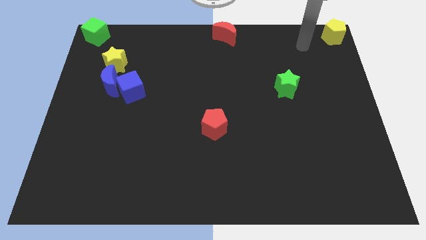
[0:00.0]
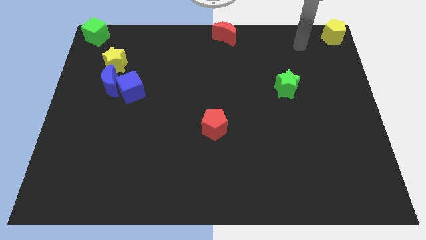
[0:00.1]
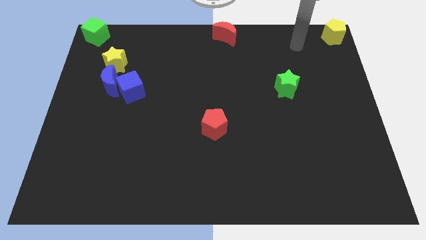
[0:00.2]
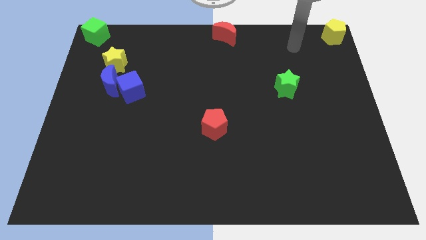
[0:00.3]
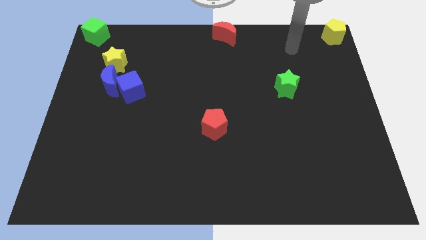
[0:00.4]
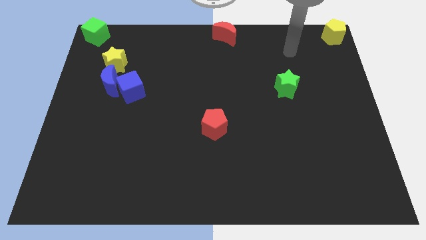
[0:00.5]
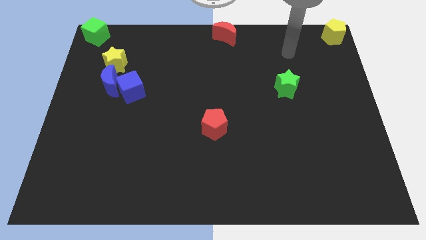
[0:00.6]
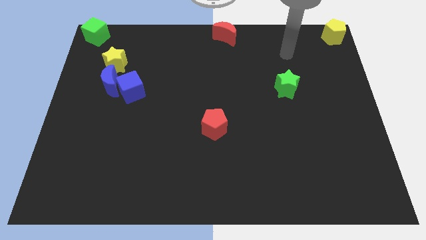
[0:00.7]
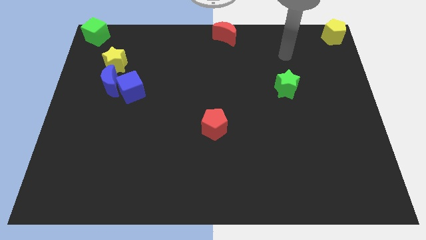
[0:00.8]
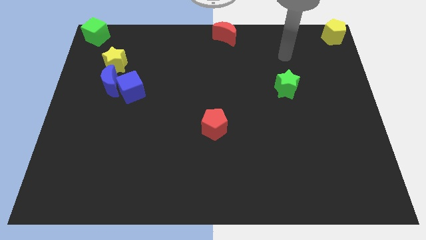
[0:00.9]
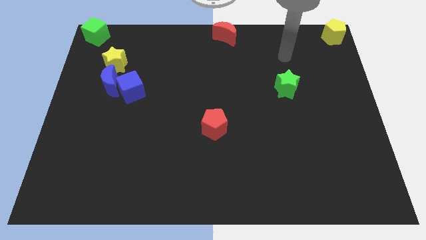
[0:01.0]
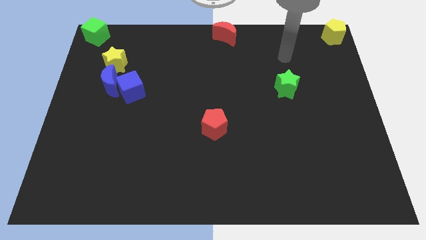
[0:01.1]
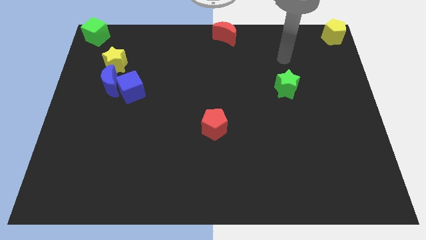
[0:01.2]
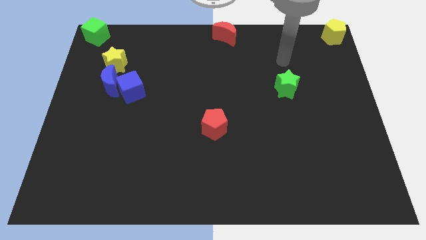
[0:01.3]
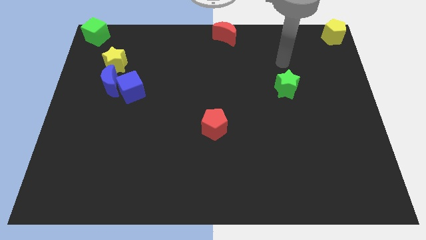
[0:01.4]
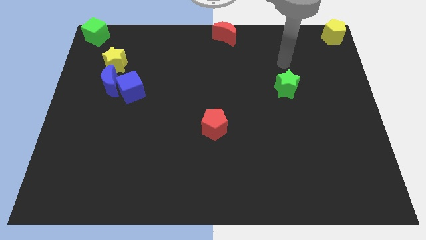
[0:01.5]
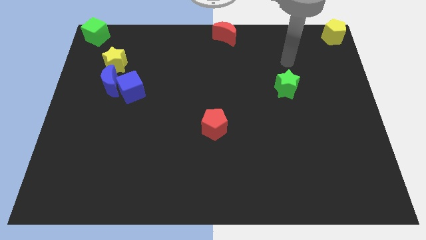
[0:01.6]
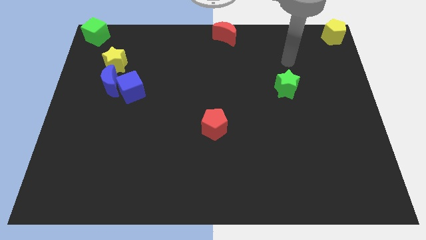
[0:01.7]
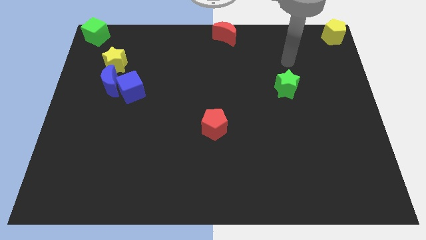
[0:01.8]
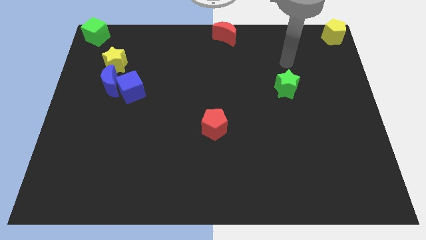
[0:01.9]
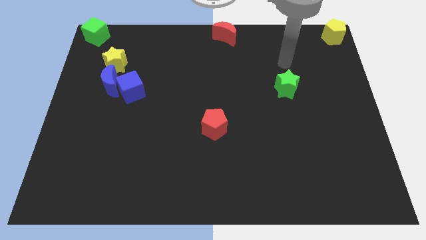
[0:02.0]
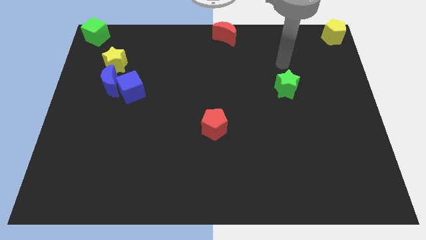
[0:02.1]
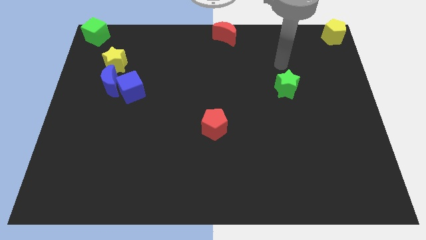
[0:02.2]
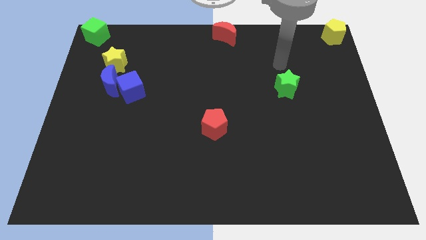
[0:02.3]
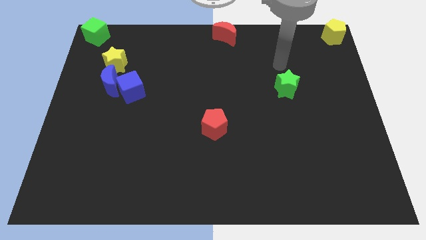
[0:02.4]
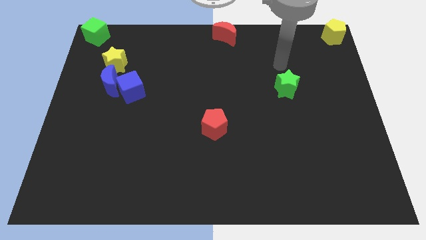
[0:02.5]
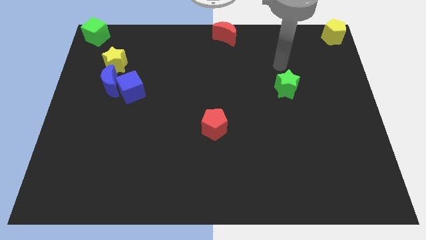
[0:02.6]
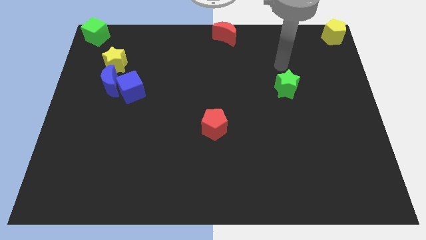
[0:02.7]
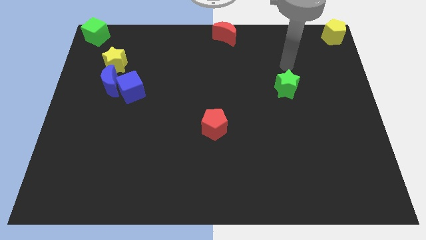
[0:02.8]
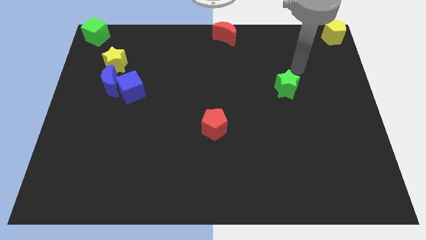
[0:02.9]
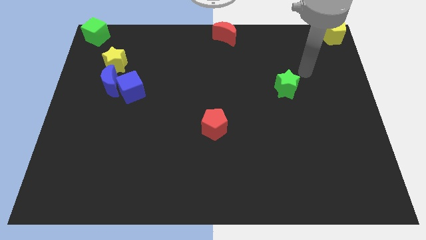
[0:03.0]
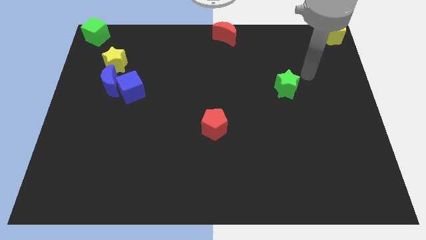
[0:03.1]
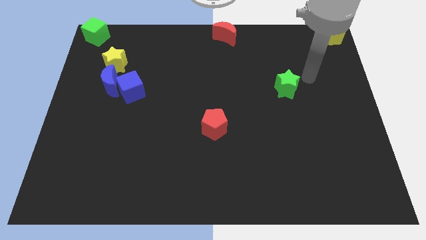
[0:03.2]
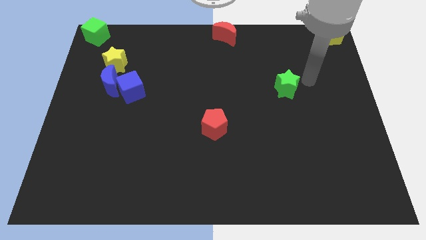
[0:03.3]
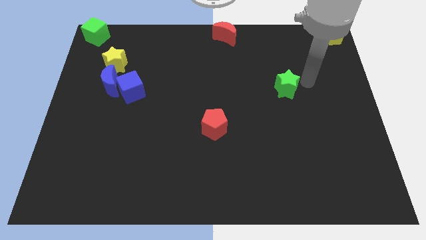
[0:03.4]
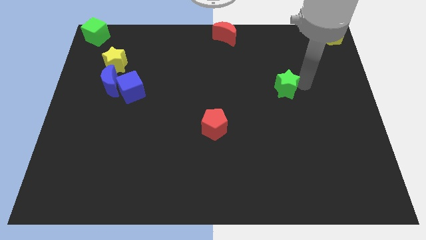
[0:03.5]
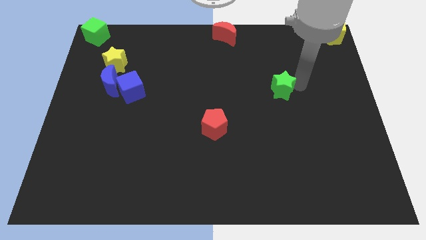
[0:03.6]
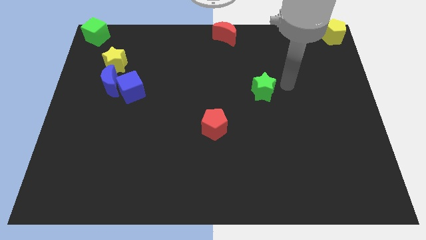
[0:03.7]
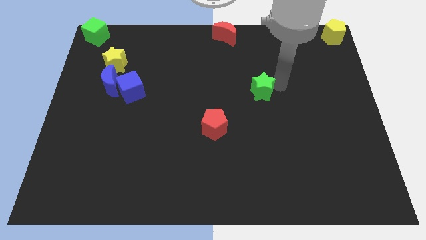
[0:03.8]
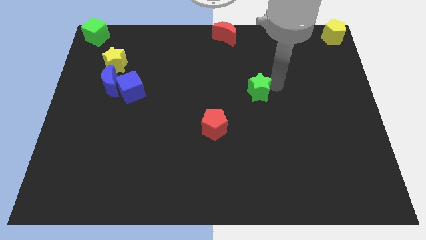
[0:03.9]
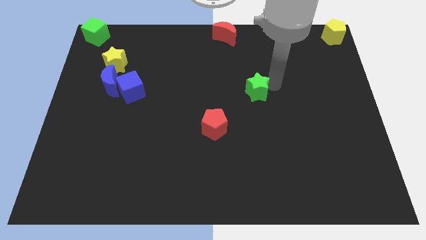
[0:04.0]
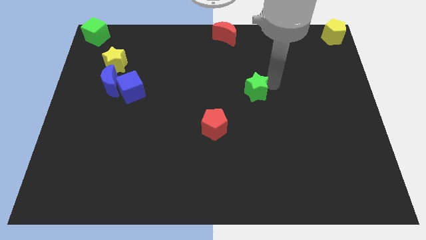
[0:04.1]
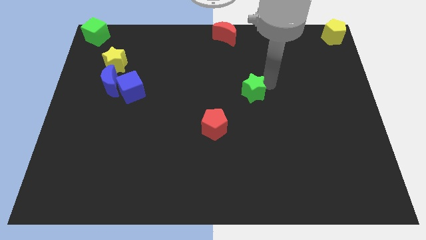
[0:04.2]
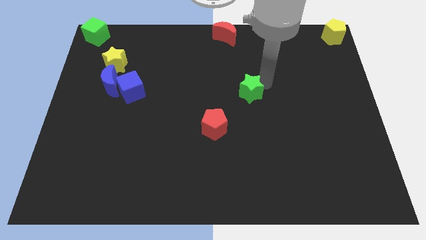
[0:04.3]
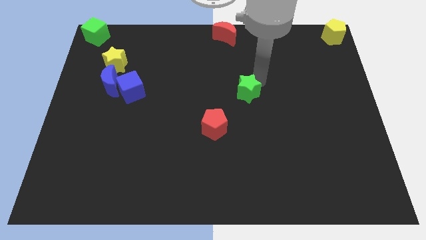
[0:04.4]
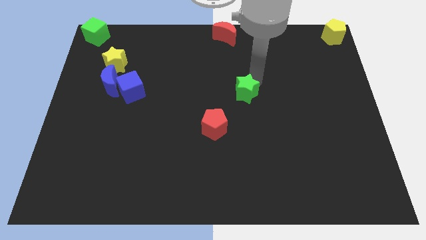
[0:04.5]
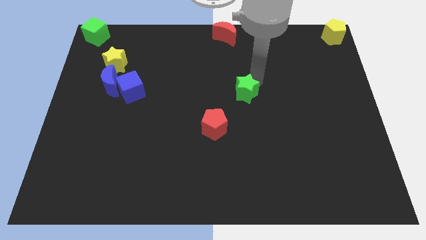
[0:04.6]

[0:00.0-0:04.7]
drag the green star towards the red pentagon

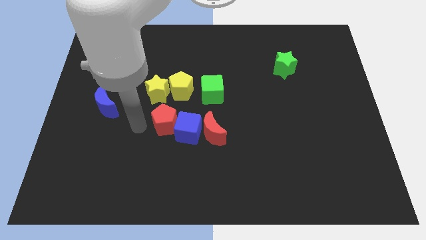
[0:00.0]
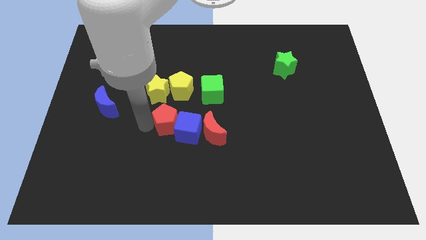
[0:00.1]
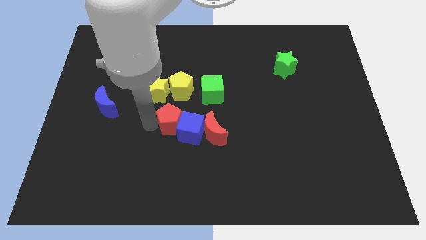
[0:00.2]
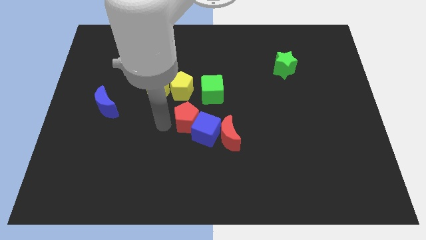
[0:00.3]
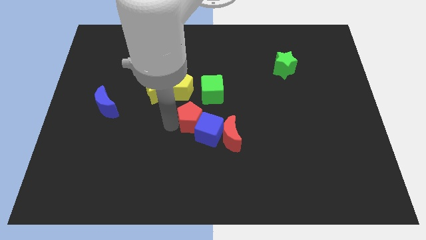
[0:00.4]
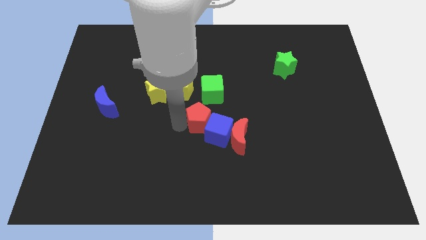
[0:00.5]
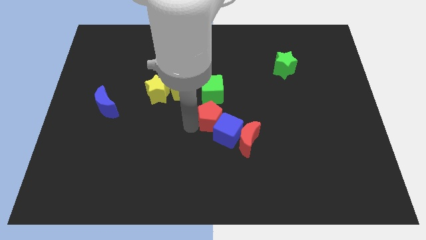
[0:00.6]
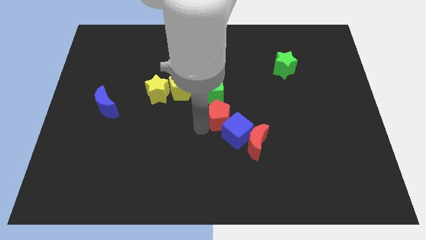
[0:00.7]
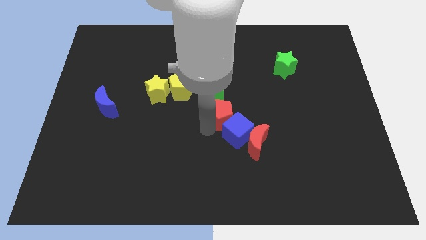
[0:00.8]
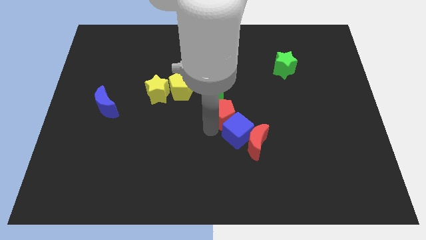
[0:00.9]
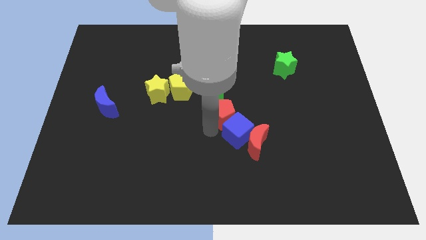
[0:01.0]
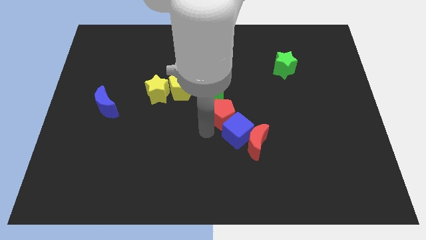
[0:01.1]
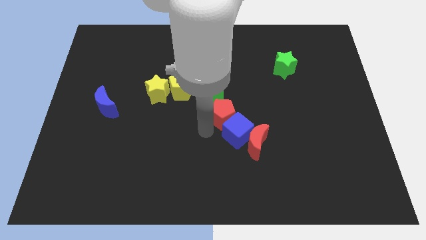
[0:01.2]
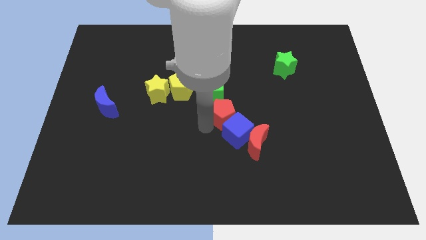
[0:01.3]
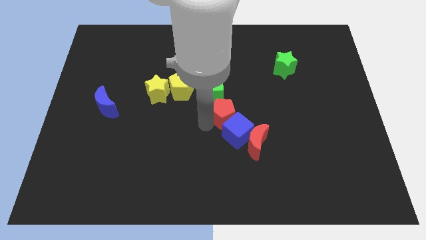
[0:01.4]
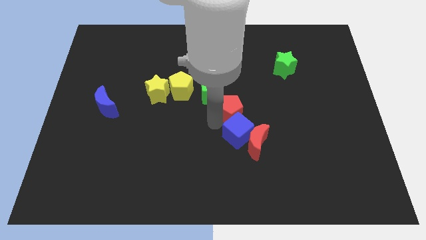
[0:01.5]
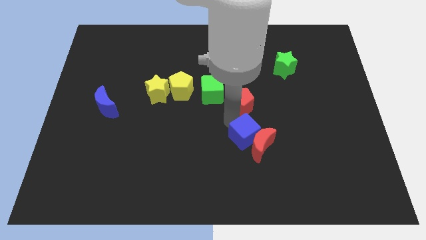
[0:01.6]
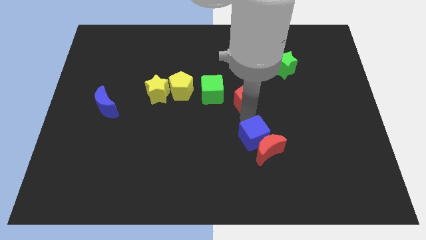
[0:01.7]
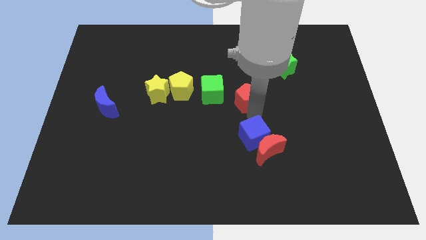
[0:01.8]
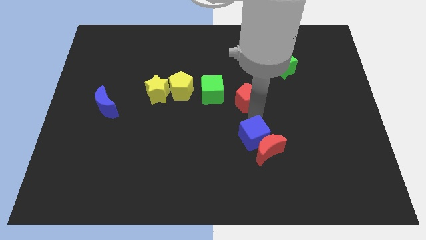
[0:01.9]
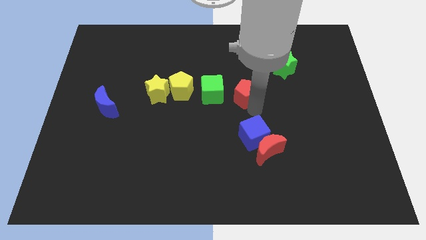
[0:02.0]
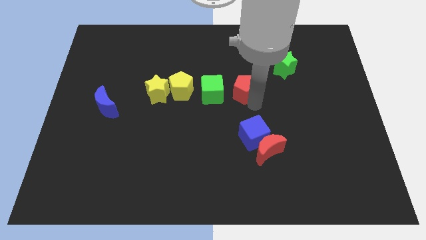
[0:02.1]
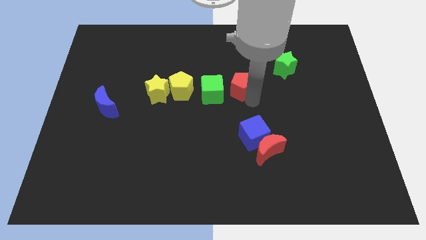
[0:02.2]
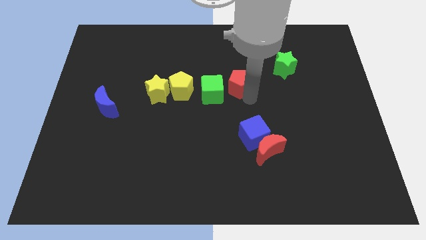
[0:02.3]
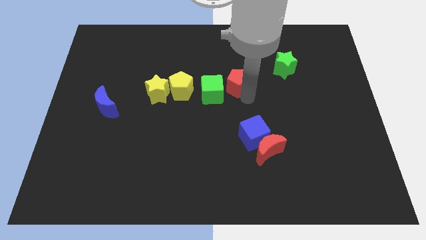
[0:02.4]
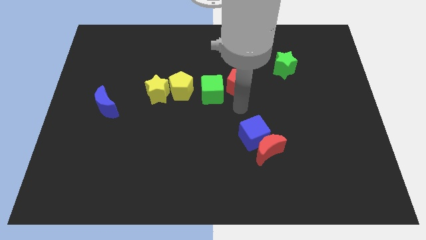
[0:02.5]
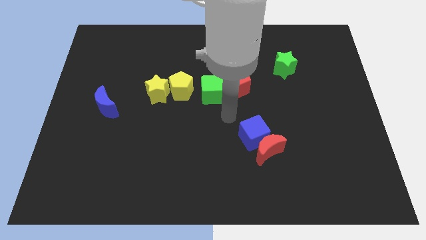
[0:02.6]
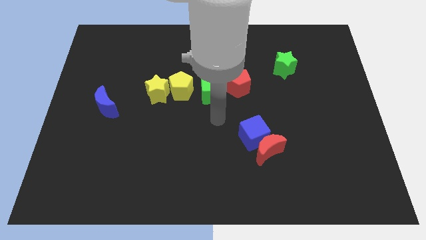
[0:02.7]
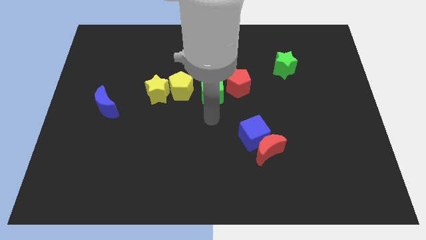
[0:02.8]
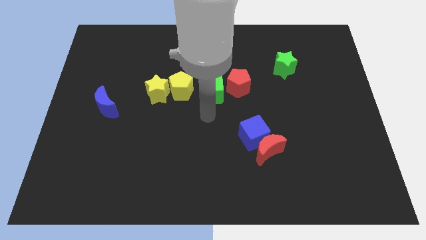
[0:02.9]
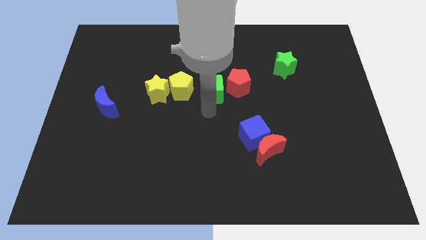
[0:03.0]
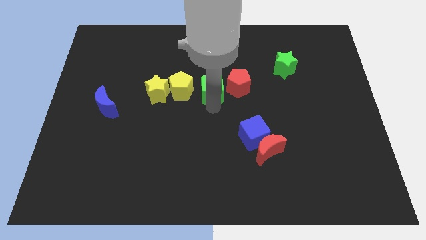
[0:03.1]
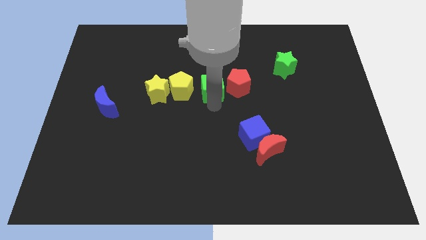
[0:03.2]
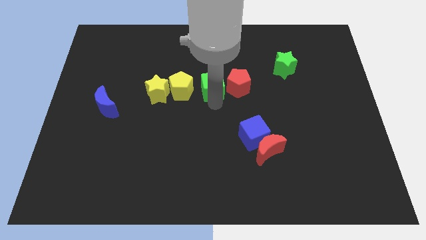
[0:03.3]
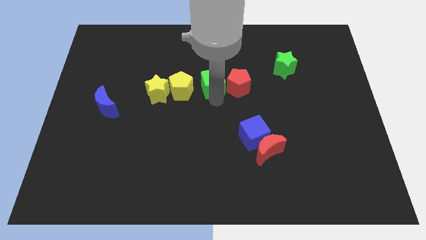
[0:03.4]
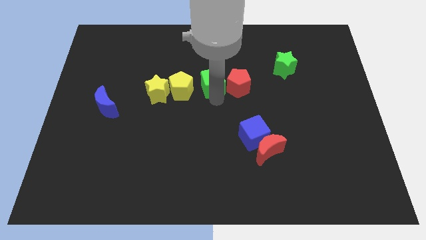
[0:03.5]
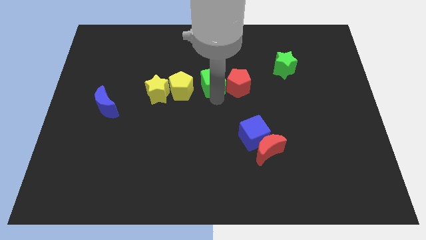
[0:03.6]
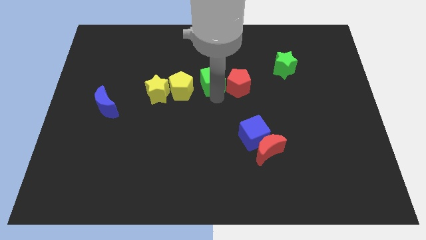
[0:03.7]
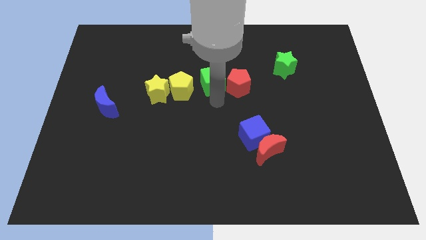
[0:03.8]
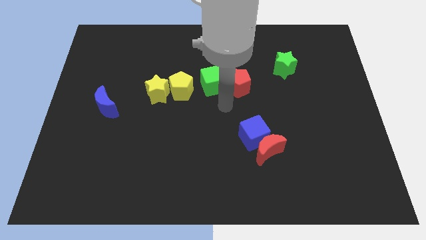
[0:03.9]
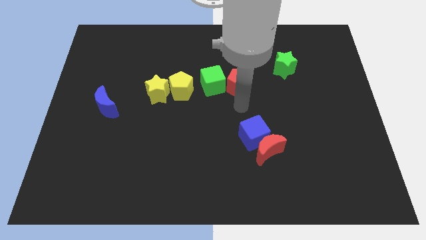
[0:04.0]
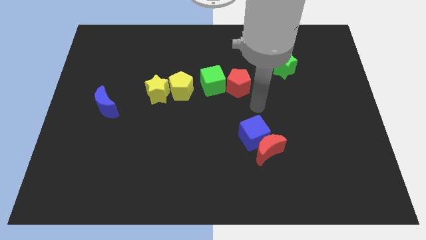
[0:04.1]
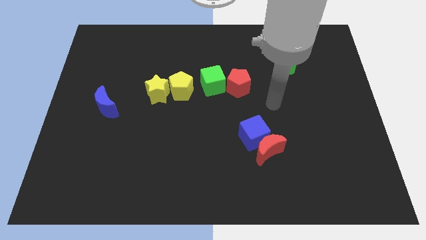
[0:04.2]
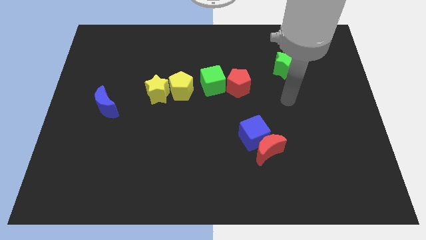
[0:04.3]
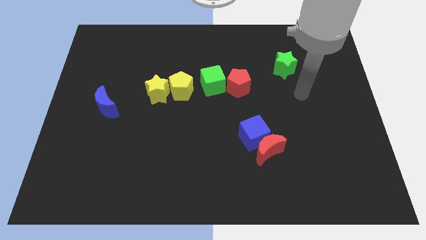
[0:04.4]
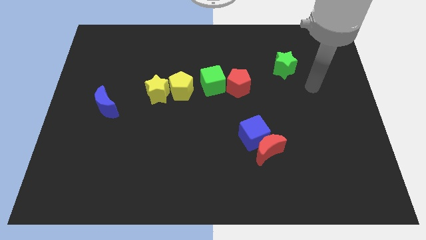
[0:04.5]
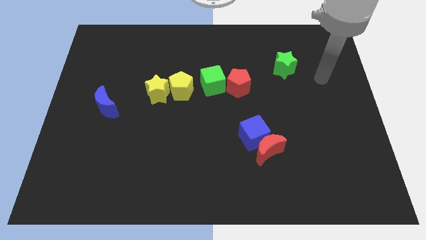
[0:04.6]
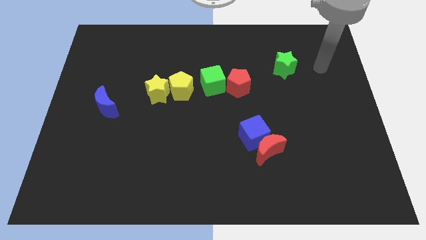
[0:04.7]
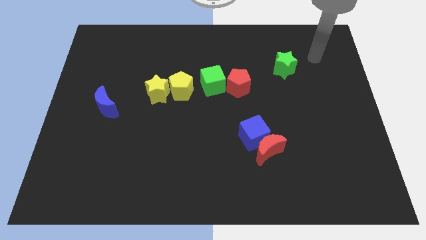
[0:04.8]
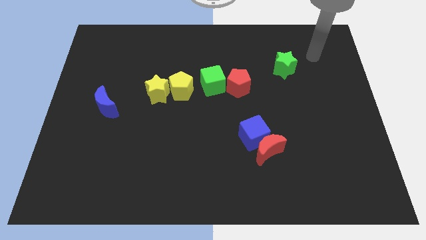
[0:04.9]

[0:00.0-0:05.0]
separate the red pentagon and the blue cube
